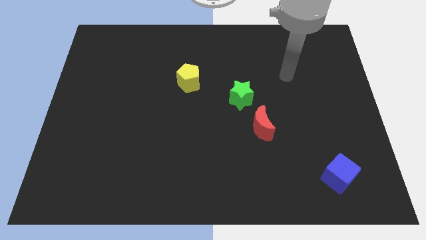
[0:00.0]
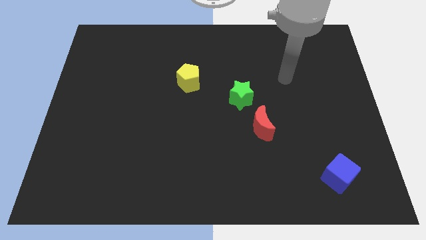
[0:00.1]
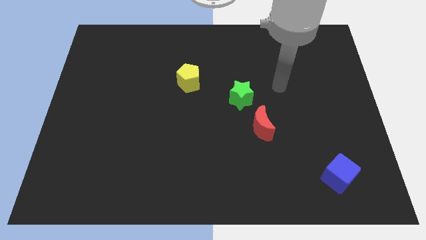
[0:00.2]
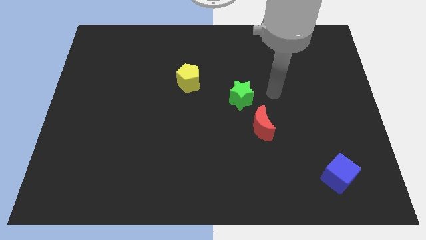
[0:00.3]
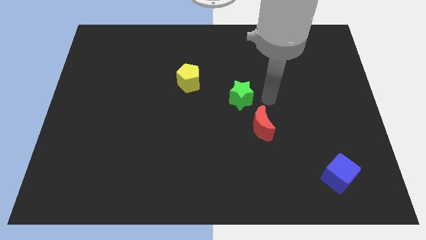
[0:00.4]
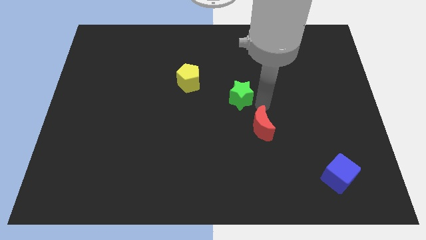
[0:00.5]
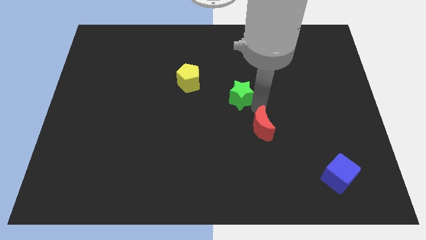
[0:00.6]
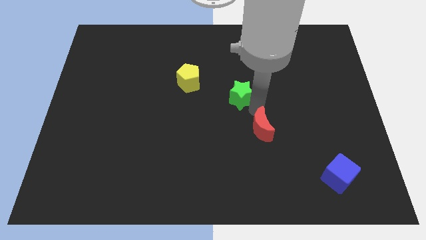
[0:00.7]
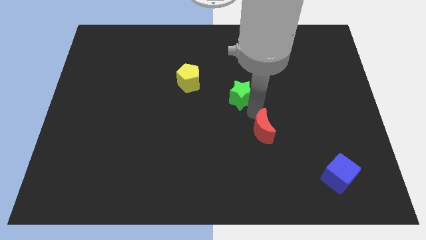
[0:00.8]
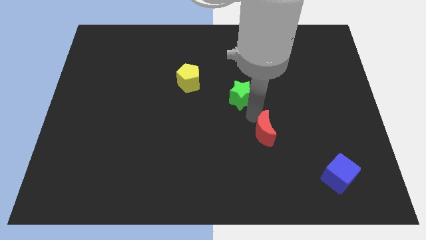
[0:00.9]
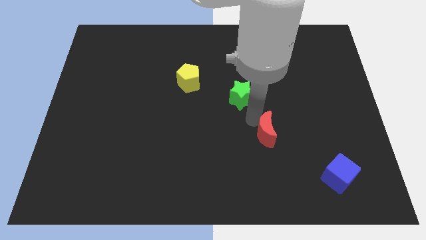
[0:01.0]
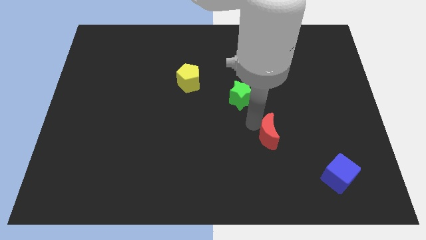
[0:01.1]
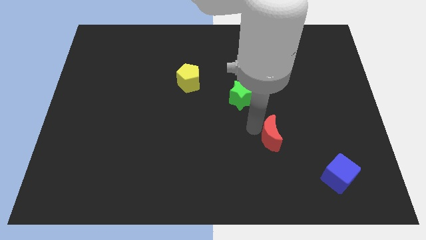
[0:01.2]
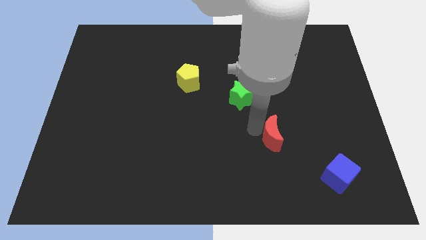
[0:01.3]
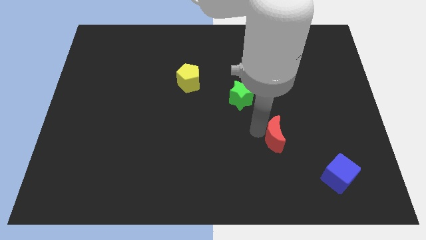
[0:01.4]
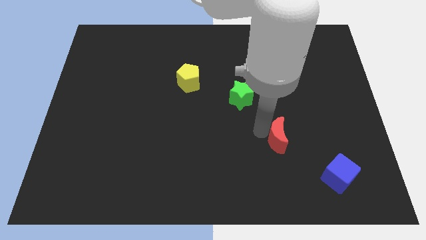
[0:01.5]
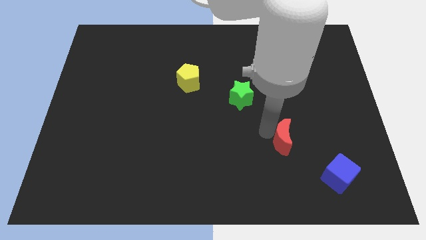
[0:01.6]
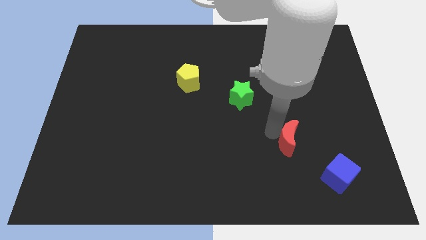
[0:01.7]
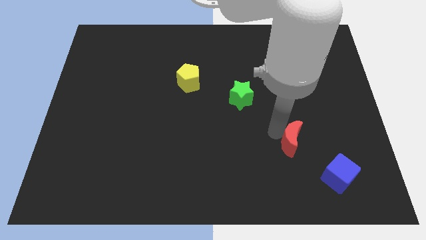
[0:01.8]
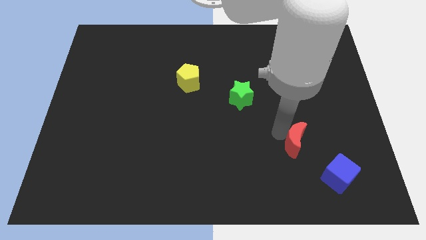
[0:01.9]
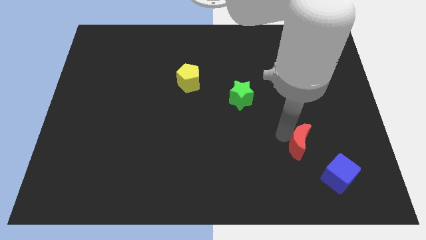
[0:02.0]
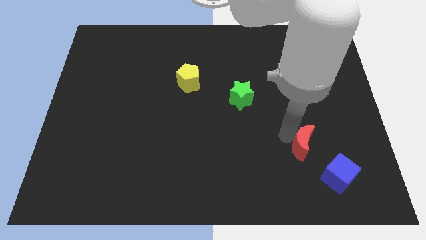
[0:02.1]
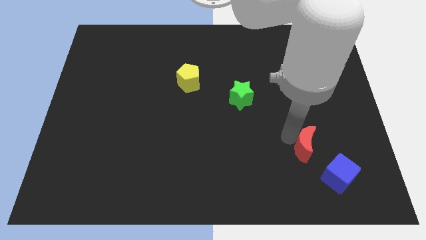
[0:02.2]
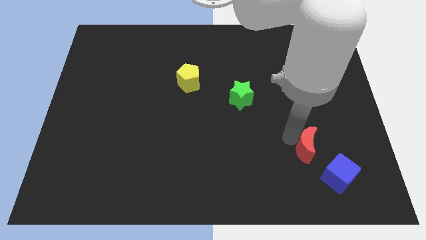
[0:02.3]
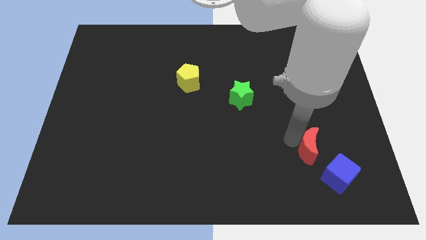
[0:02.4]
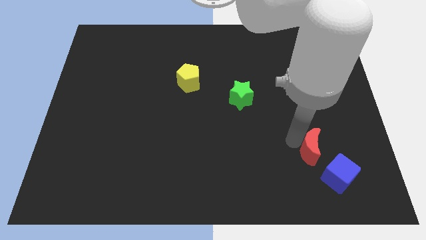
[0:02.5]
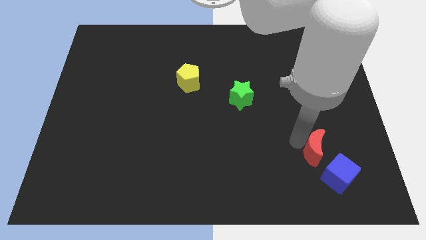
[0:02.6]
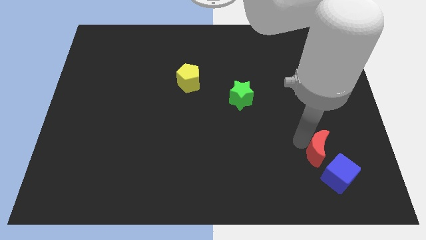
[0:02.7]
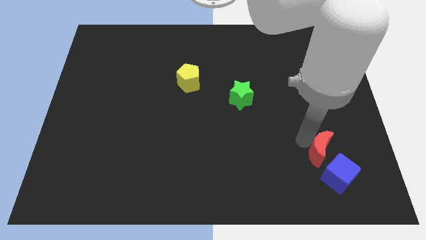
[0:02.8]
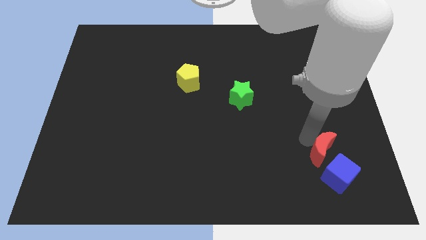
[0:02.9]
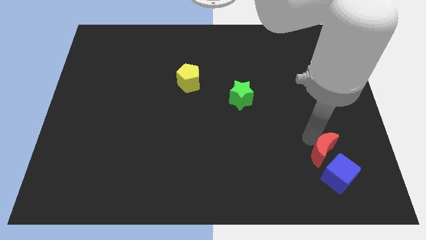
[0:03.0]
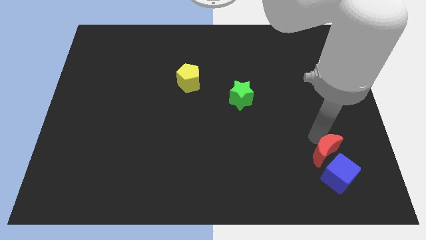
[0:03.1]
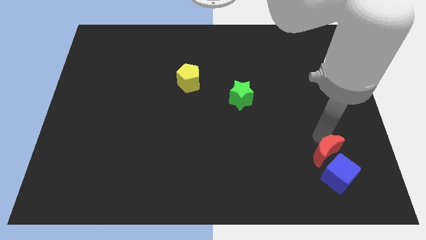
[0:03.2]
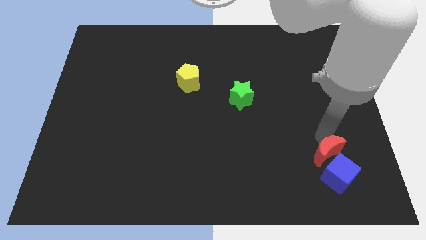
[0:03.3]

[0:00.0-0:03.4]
put the red moon towards the blue block

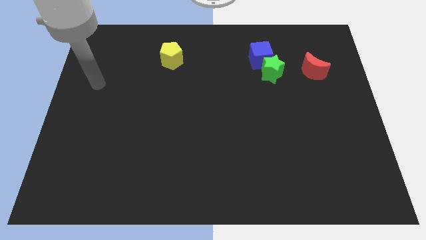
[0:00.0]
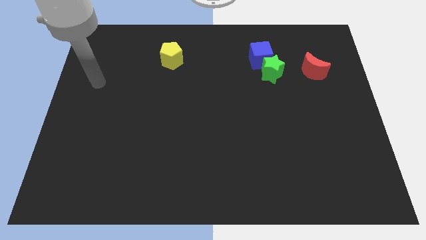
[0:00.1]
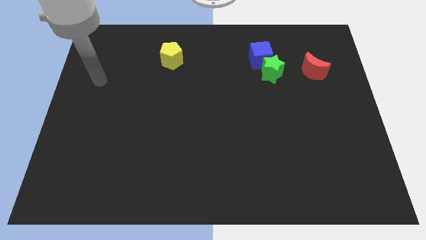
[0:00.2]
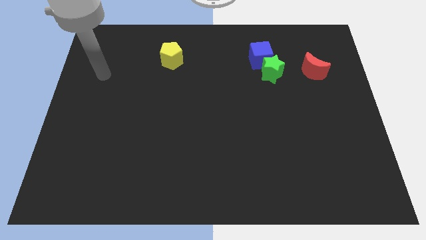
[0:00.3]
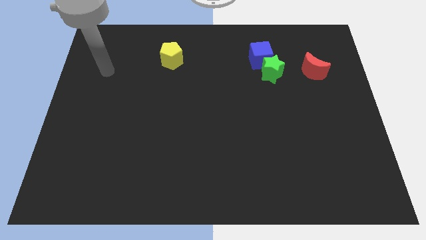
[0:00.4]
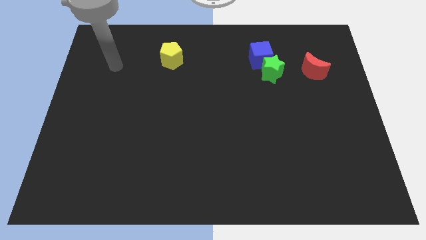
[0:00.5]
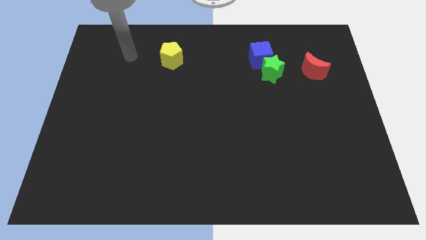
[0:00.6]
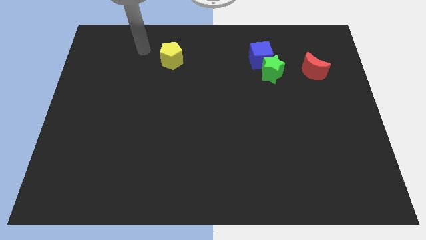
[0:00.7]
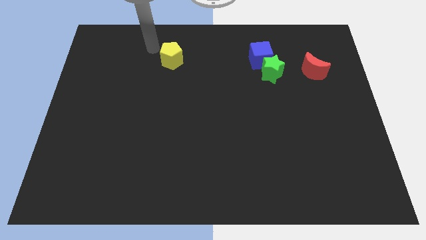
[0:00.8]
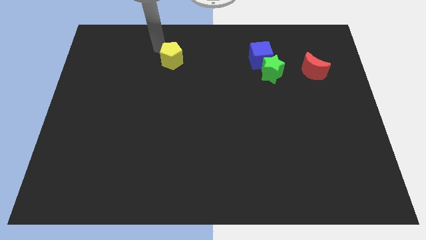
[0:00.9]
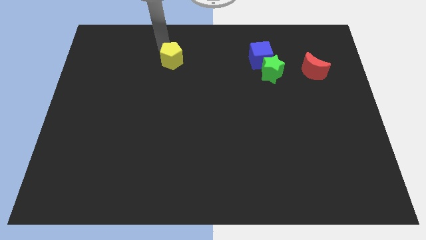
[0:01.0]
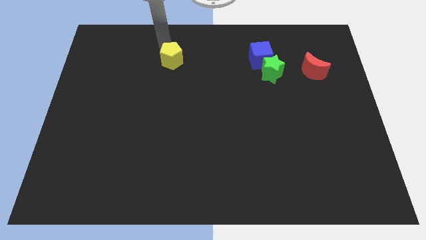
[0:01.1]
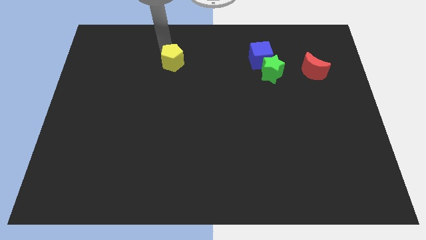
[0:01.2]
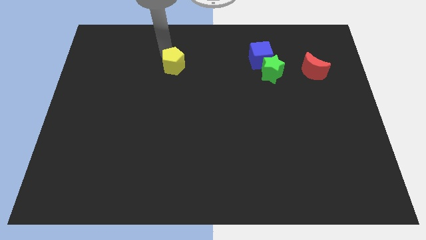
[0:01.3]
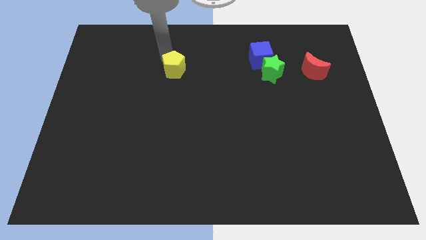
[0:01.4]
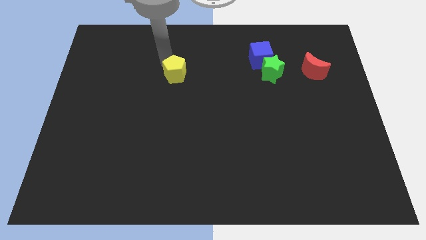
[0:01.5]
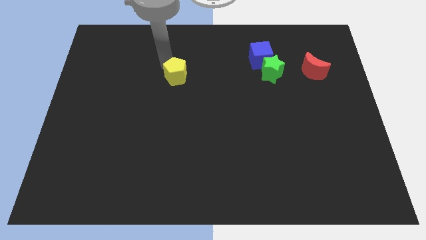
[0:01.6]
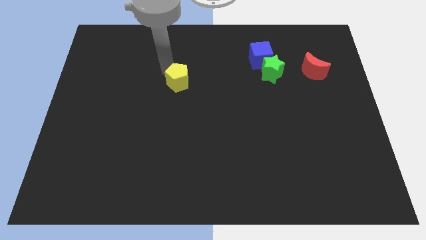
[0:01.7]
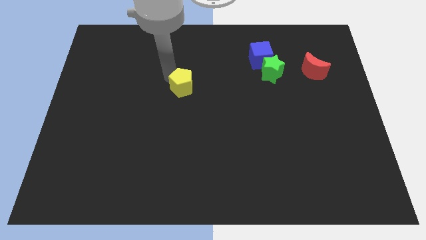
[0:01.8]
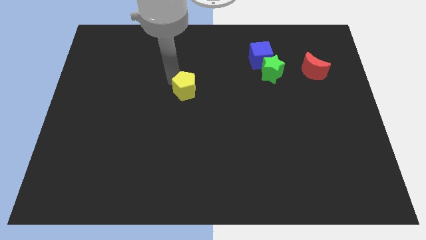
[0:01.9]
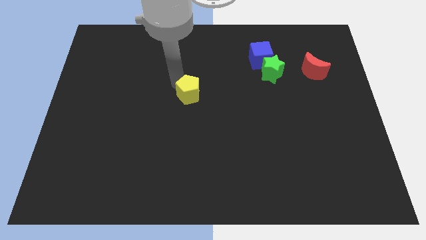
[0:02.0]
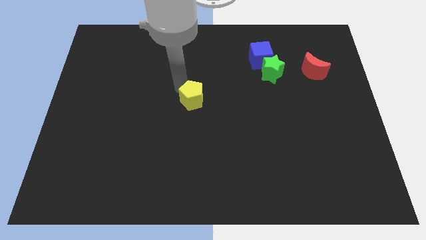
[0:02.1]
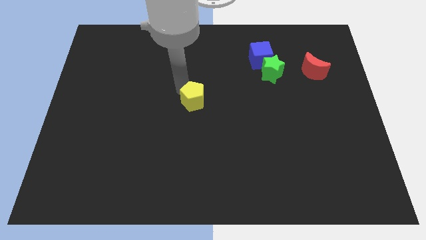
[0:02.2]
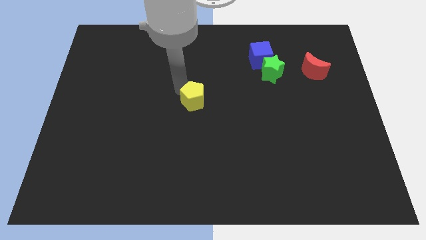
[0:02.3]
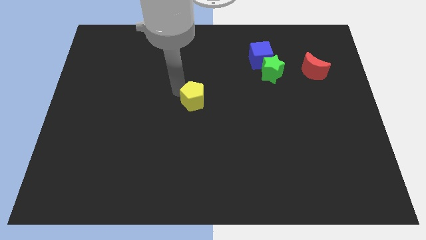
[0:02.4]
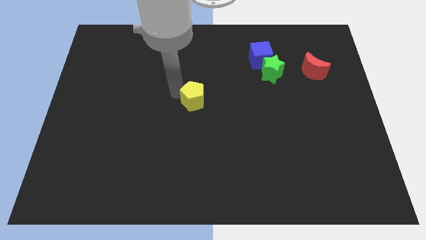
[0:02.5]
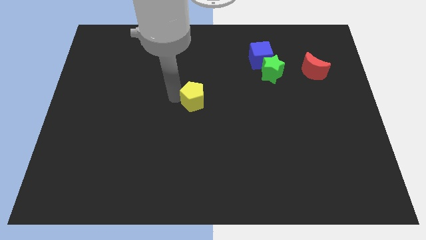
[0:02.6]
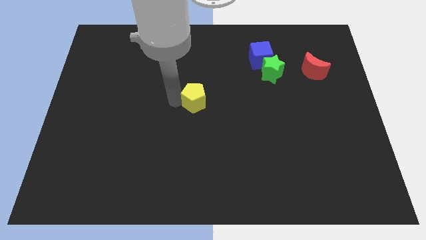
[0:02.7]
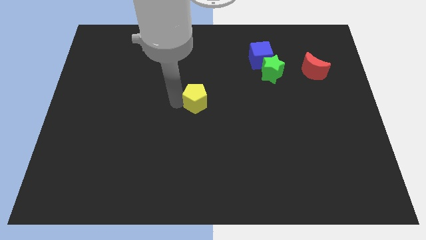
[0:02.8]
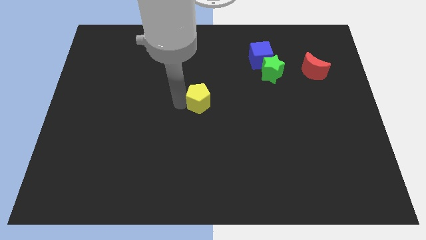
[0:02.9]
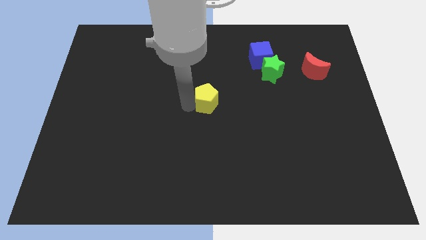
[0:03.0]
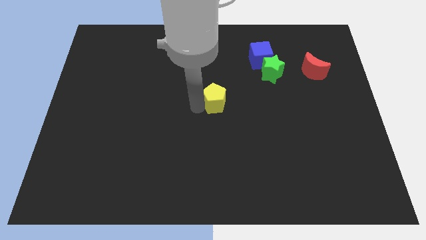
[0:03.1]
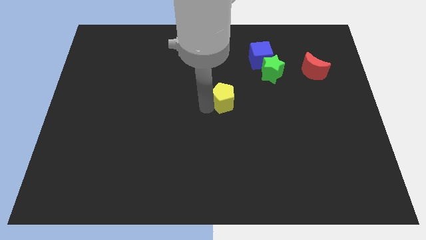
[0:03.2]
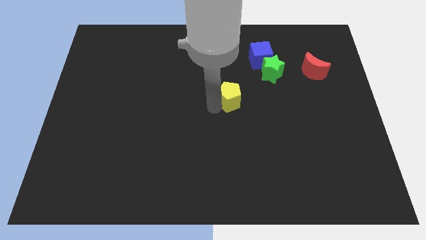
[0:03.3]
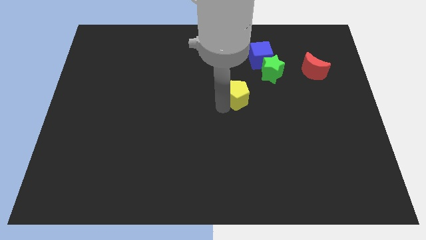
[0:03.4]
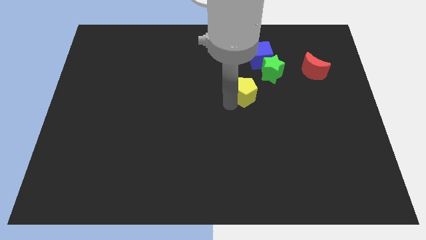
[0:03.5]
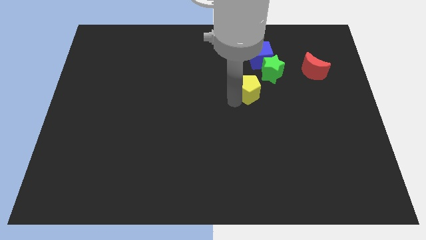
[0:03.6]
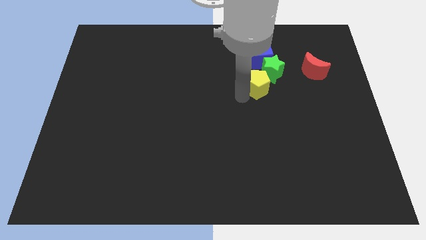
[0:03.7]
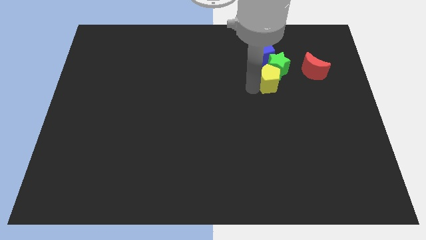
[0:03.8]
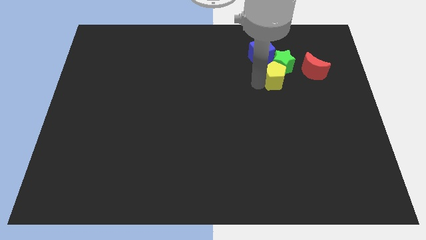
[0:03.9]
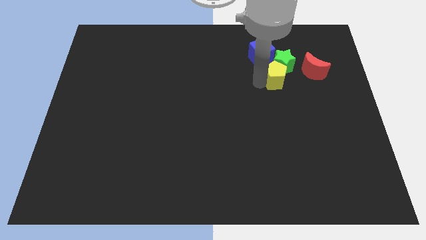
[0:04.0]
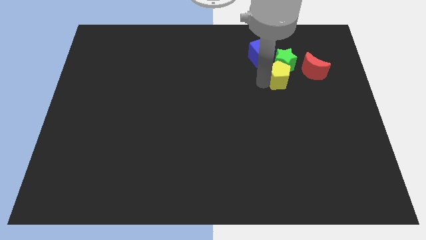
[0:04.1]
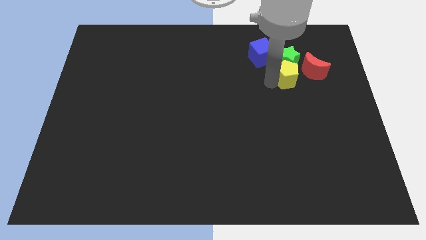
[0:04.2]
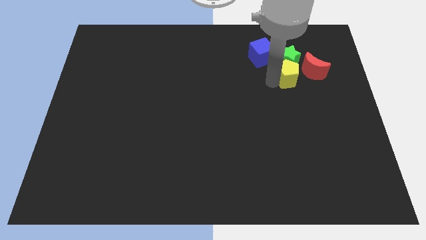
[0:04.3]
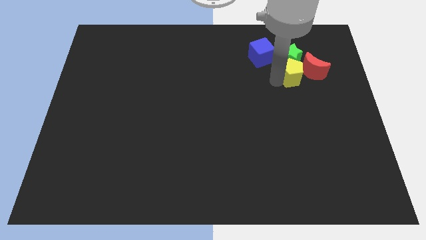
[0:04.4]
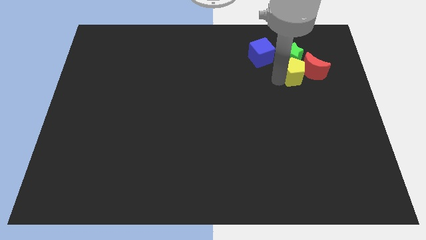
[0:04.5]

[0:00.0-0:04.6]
push the yellow block to the moon
